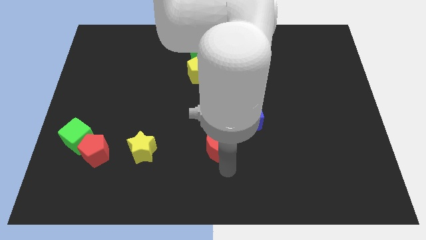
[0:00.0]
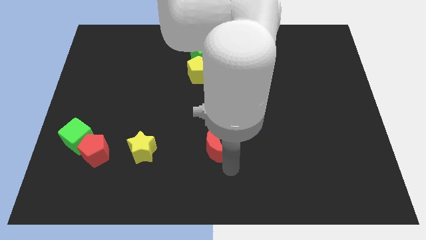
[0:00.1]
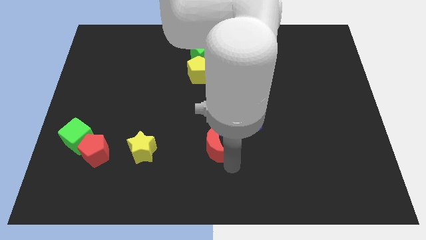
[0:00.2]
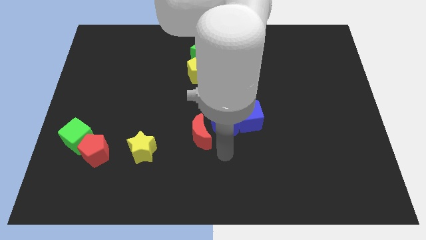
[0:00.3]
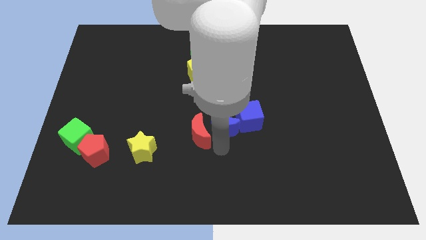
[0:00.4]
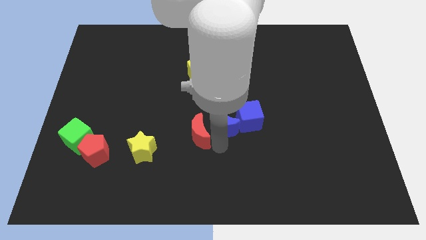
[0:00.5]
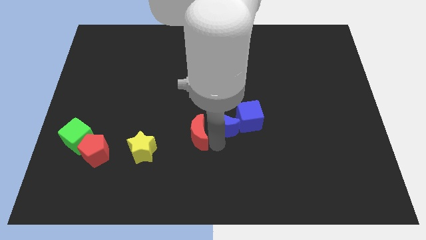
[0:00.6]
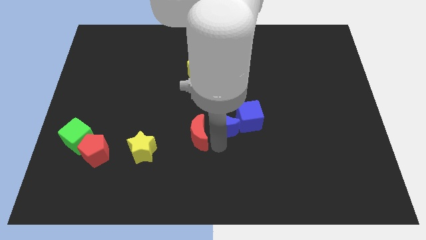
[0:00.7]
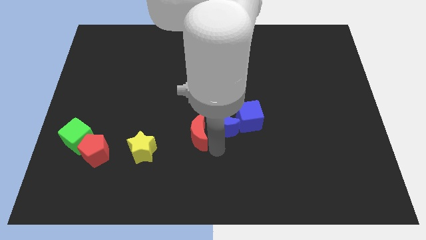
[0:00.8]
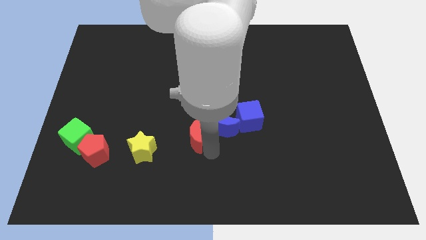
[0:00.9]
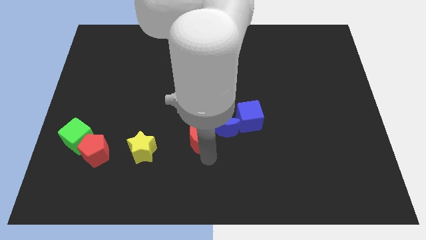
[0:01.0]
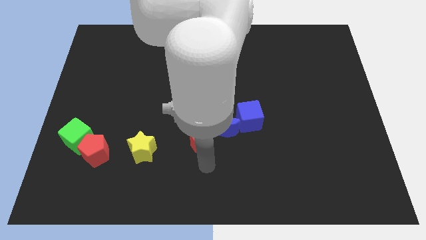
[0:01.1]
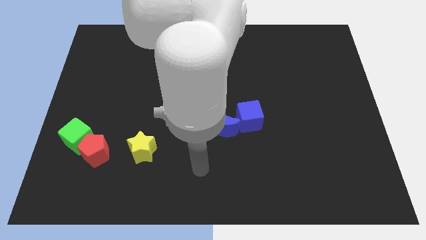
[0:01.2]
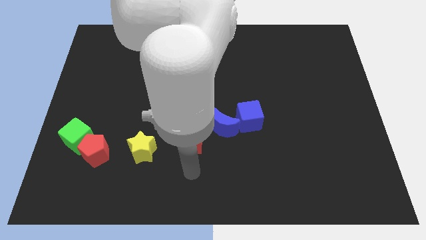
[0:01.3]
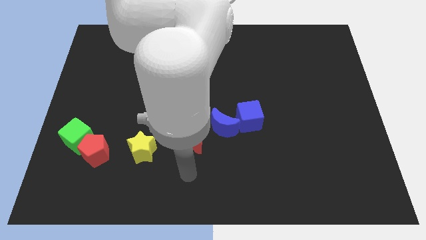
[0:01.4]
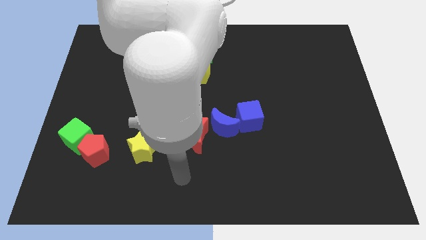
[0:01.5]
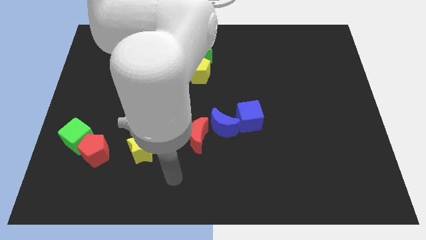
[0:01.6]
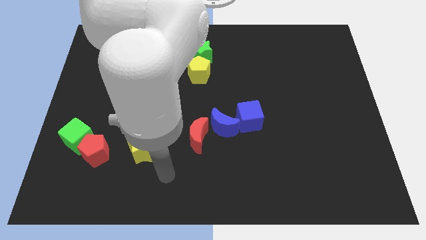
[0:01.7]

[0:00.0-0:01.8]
push the red crescent to the left of the blue crescent

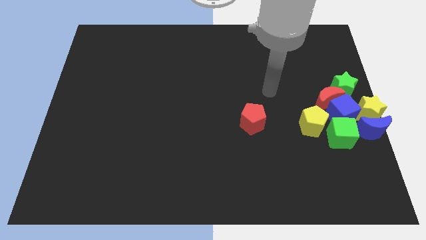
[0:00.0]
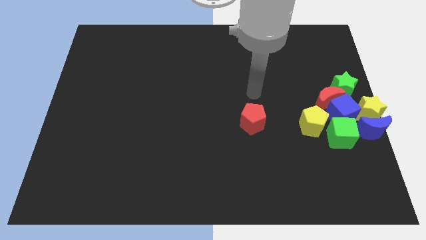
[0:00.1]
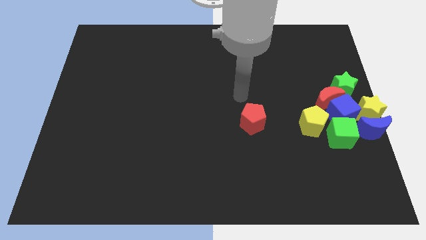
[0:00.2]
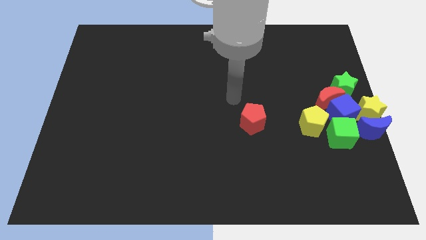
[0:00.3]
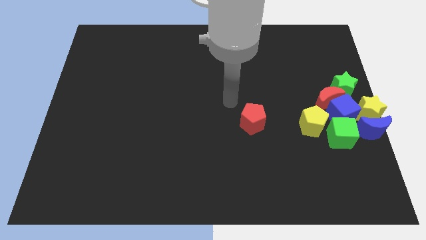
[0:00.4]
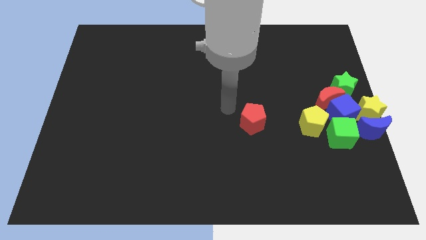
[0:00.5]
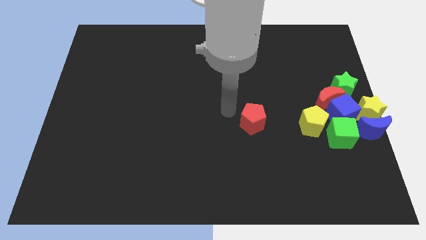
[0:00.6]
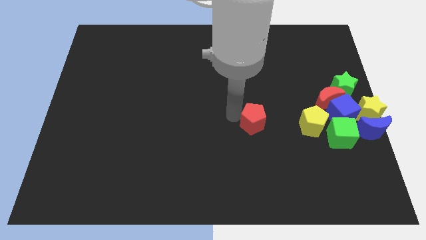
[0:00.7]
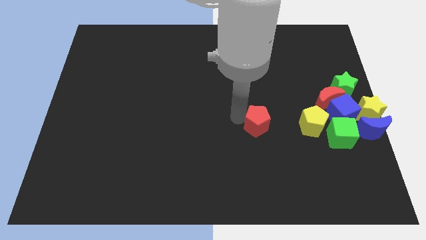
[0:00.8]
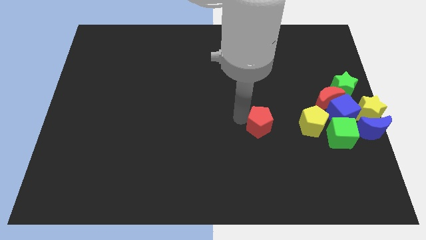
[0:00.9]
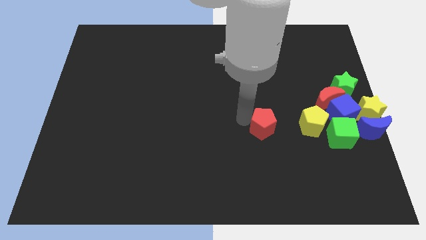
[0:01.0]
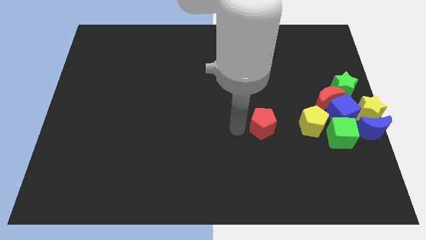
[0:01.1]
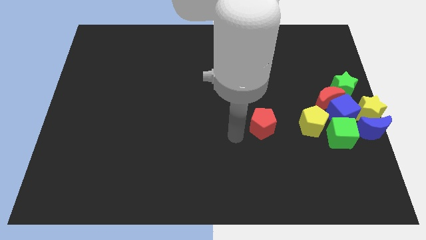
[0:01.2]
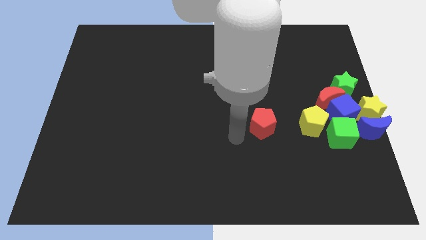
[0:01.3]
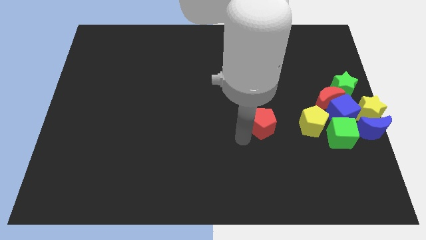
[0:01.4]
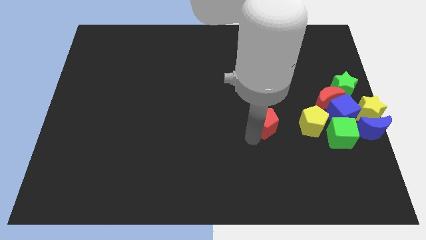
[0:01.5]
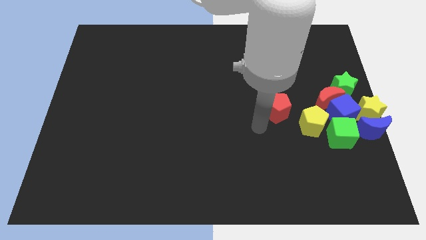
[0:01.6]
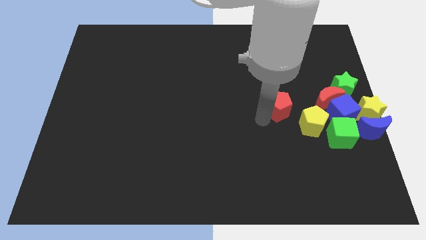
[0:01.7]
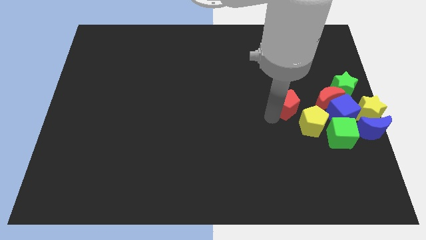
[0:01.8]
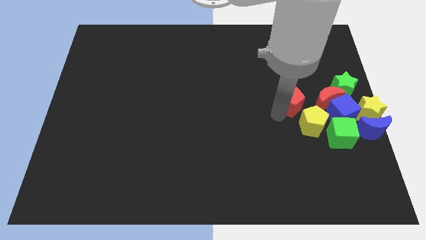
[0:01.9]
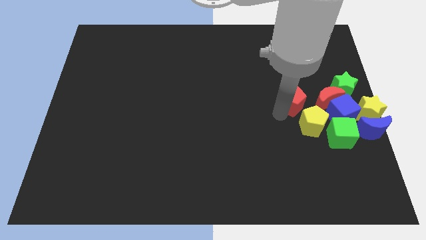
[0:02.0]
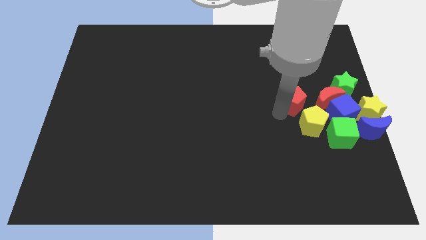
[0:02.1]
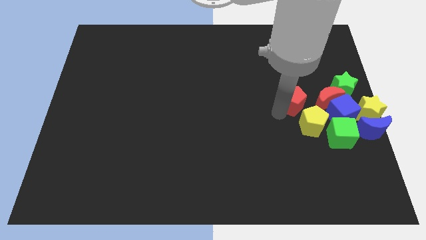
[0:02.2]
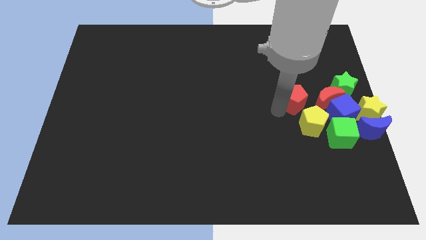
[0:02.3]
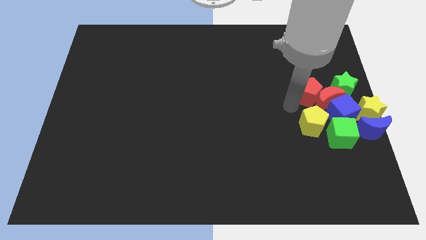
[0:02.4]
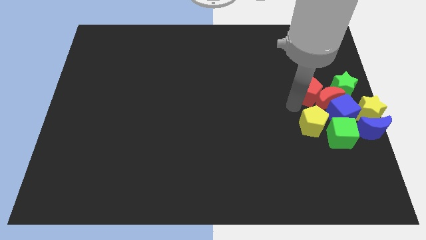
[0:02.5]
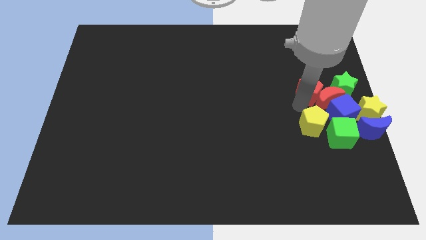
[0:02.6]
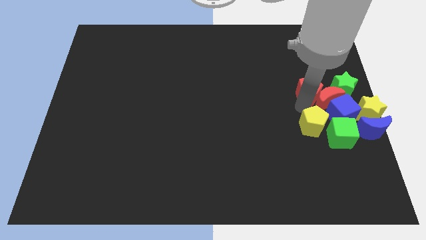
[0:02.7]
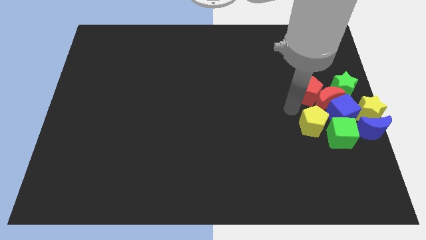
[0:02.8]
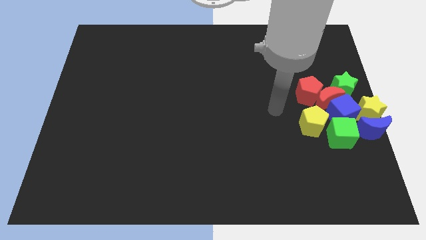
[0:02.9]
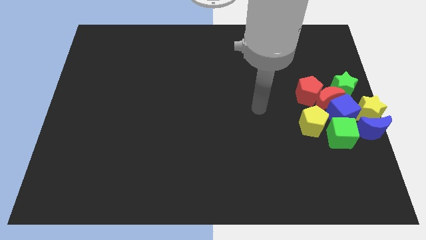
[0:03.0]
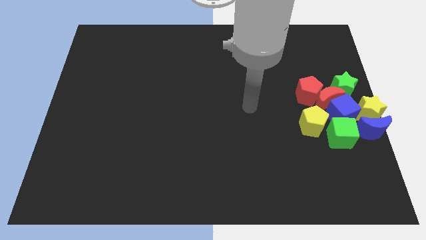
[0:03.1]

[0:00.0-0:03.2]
place red pentagon above yellow pentagon

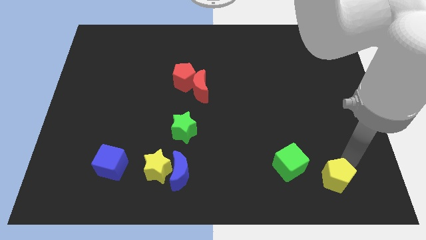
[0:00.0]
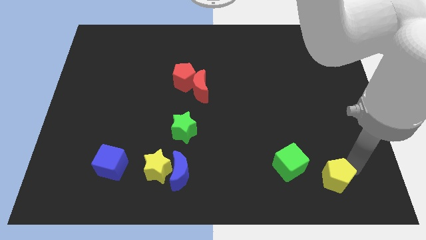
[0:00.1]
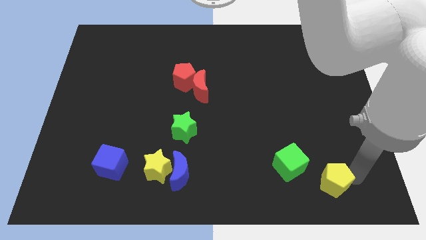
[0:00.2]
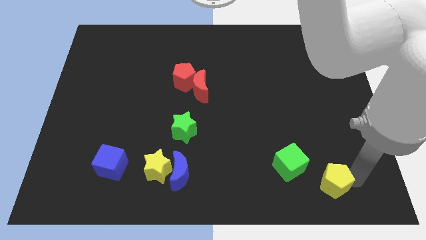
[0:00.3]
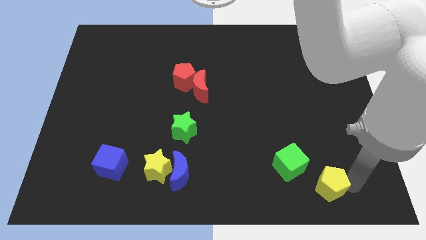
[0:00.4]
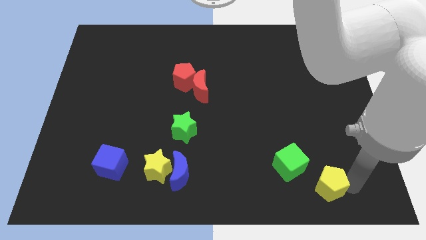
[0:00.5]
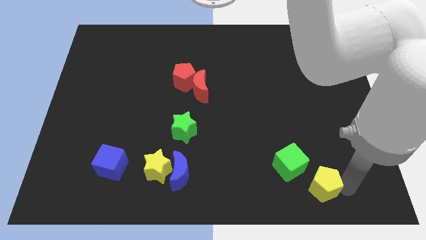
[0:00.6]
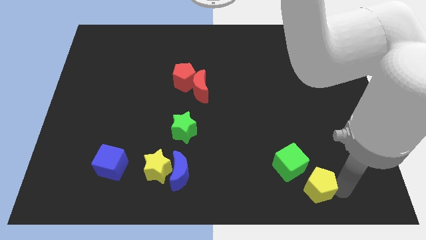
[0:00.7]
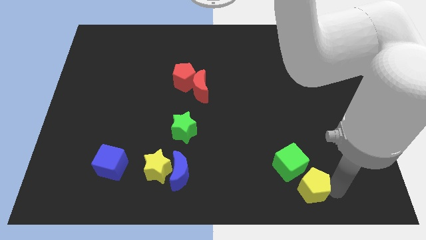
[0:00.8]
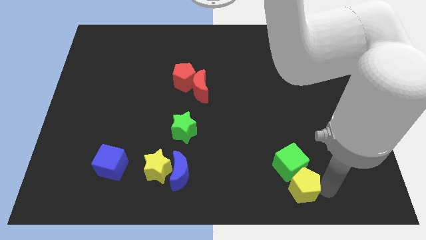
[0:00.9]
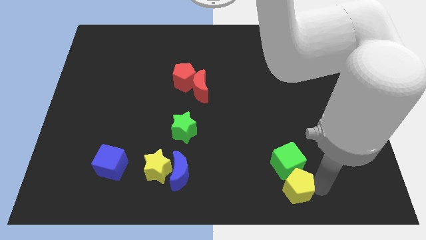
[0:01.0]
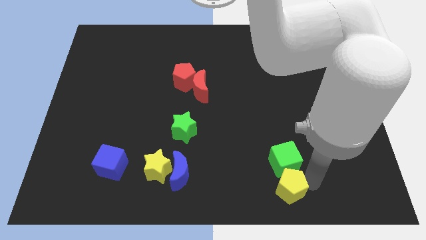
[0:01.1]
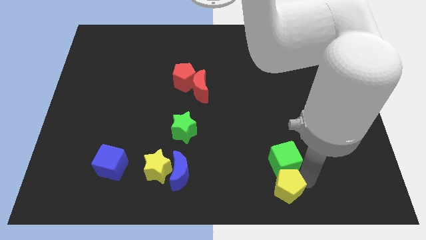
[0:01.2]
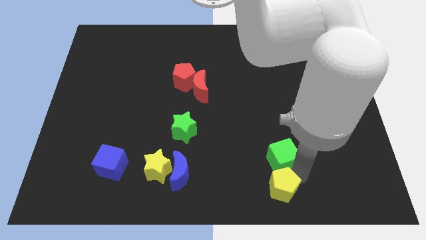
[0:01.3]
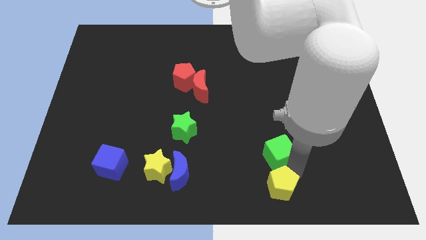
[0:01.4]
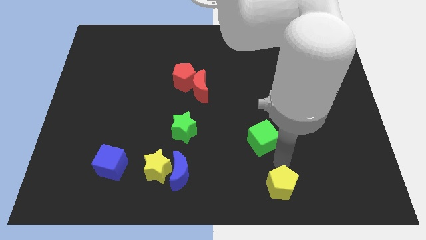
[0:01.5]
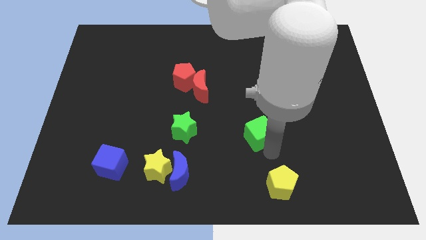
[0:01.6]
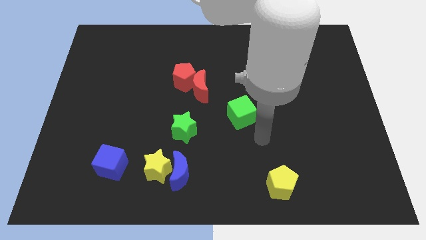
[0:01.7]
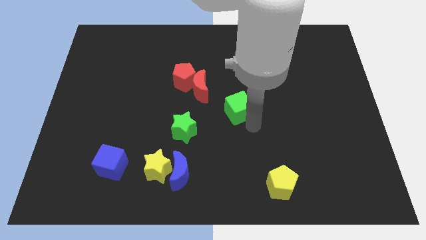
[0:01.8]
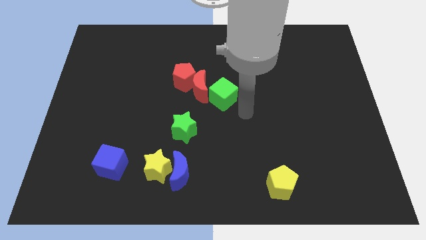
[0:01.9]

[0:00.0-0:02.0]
push the green cube to the center of the board

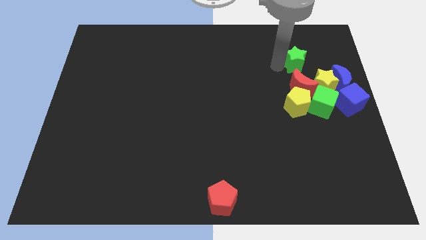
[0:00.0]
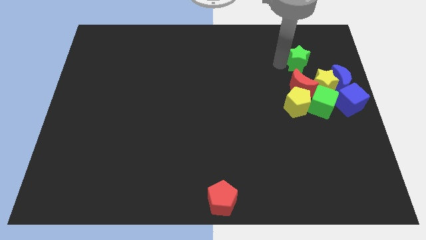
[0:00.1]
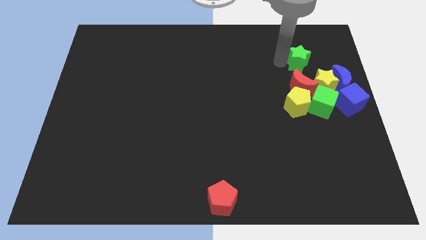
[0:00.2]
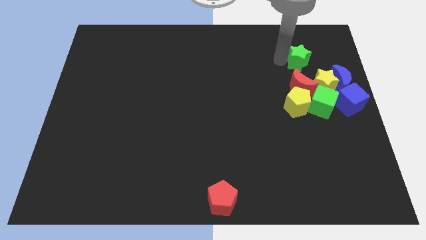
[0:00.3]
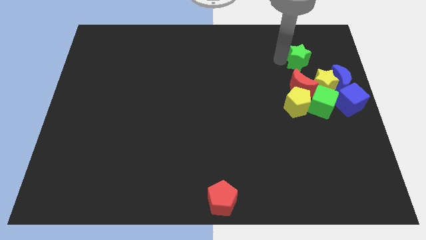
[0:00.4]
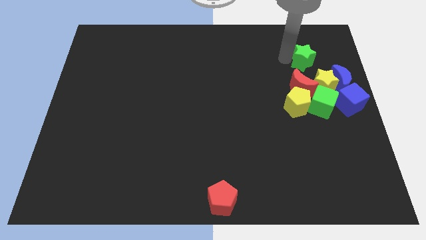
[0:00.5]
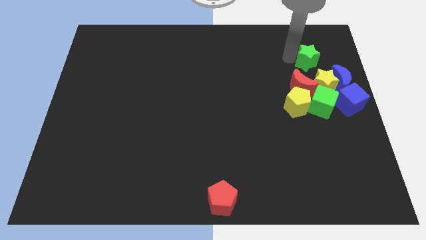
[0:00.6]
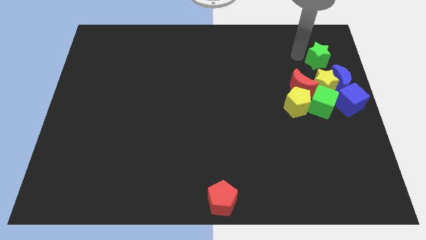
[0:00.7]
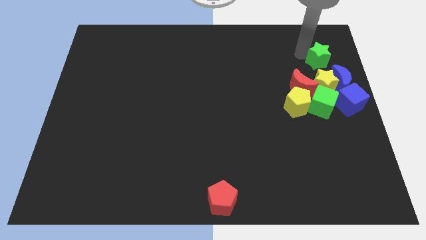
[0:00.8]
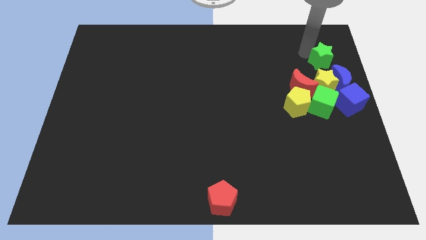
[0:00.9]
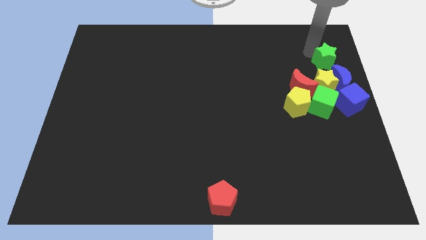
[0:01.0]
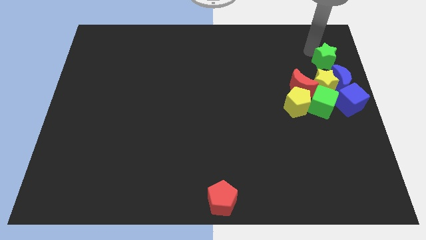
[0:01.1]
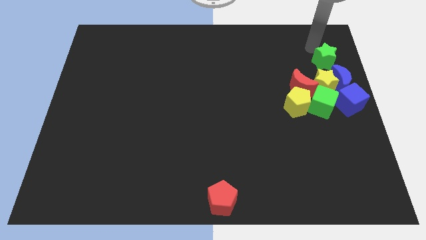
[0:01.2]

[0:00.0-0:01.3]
move the green star to the top side of the yellow star

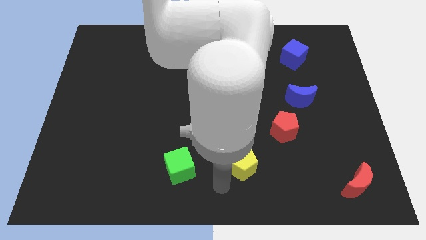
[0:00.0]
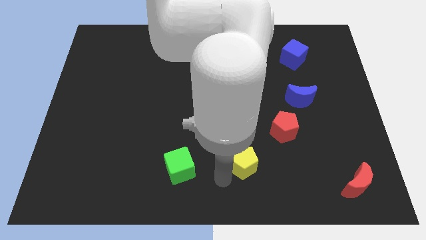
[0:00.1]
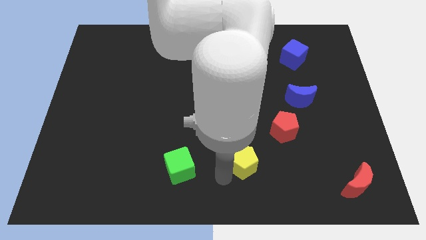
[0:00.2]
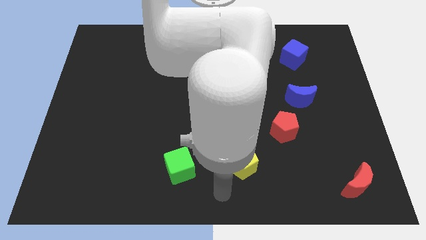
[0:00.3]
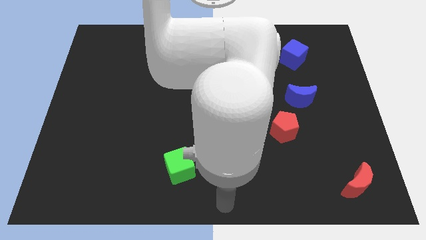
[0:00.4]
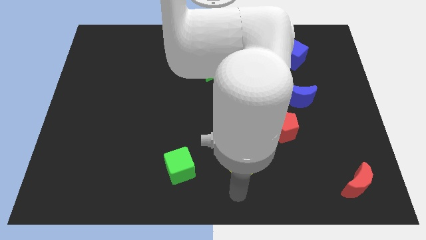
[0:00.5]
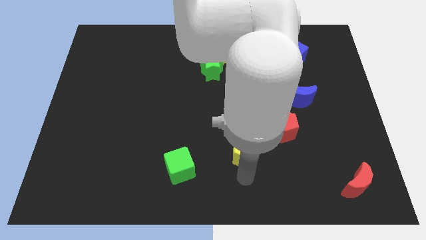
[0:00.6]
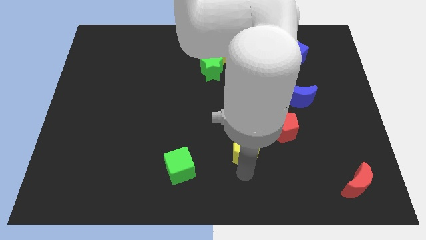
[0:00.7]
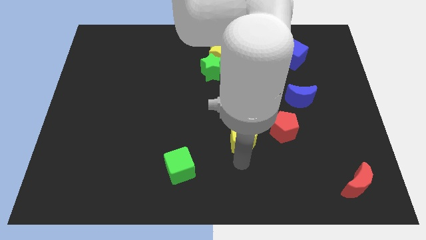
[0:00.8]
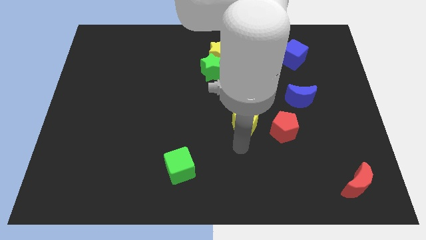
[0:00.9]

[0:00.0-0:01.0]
drag the yellow pentagon left to the red pentagon
